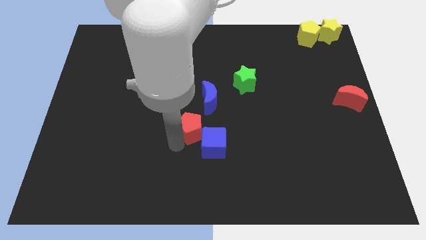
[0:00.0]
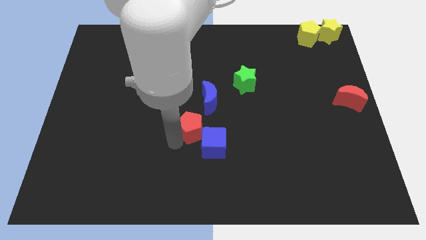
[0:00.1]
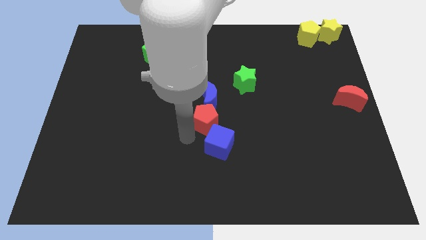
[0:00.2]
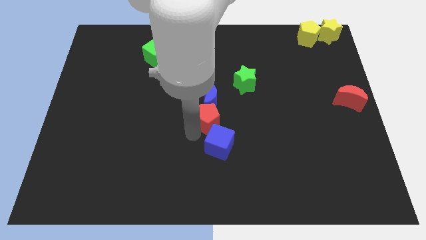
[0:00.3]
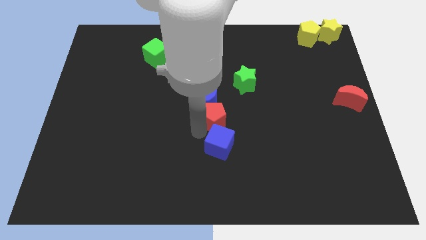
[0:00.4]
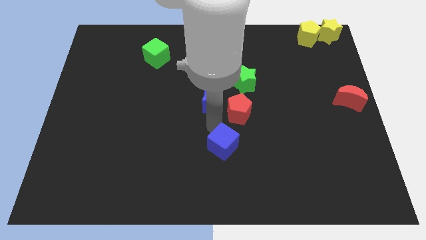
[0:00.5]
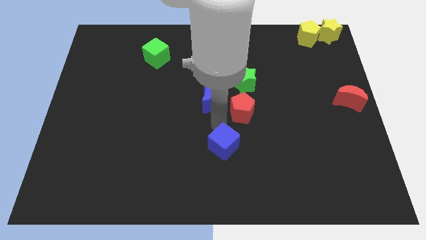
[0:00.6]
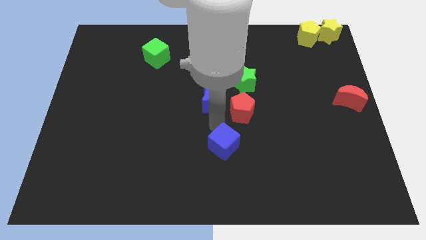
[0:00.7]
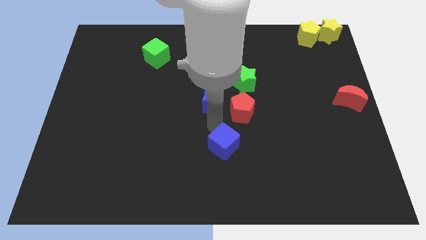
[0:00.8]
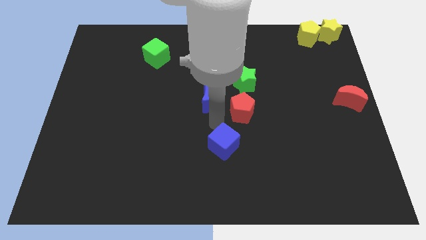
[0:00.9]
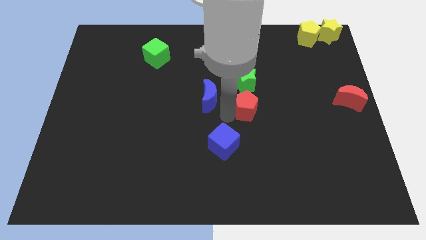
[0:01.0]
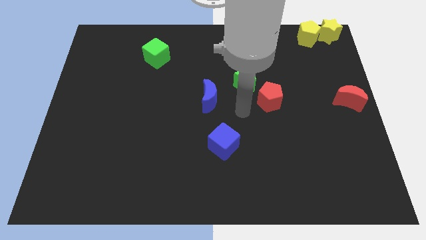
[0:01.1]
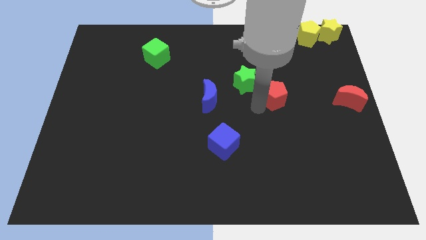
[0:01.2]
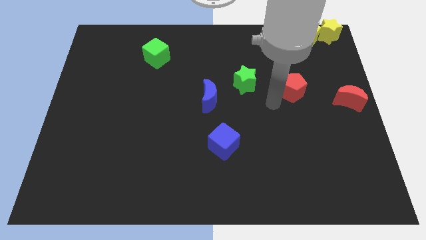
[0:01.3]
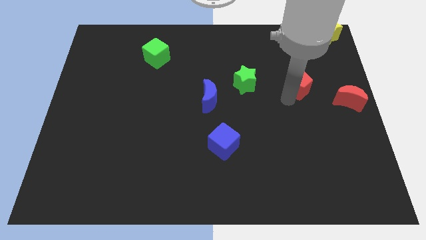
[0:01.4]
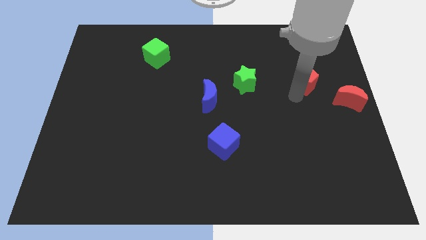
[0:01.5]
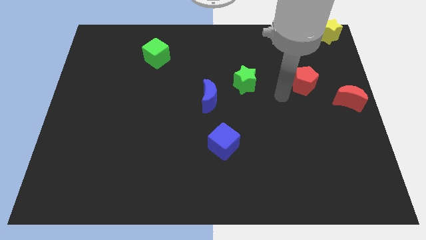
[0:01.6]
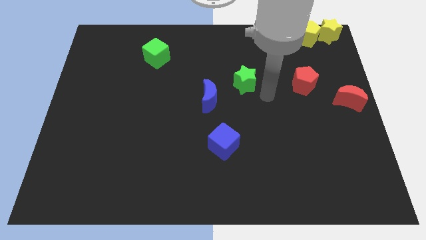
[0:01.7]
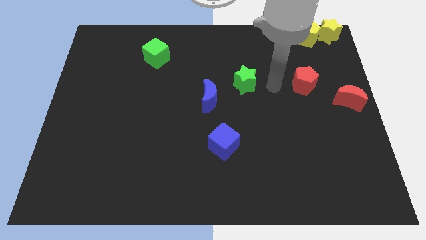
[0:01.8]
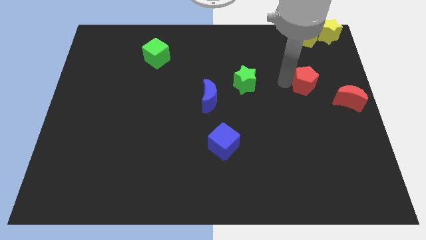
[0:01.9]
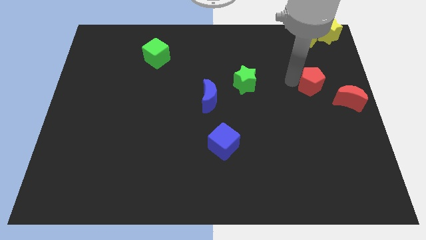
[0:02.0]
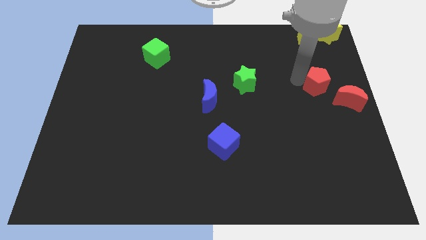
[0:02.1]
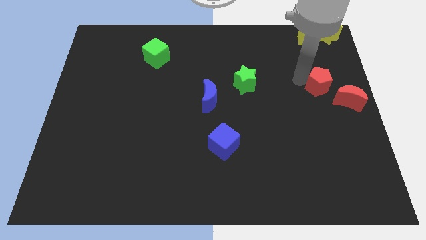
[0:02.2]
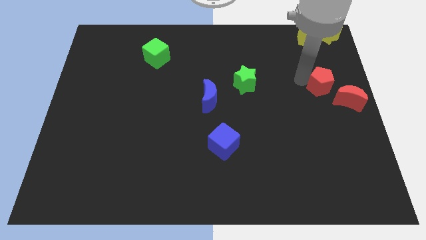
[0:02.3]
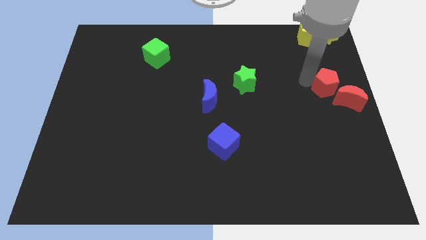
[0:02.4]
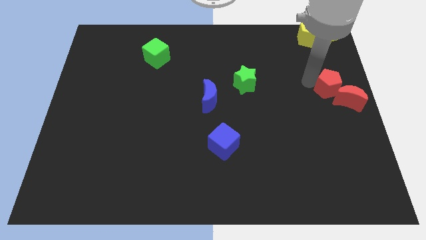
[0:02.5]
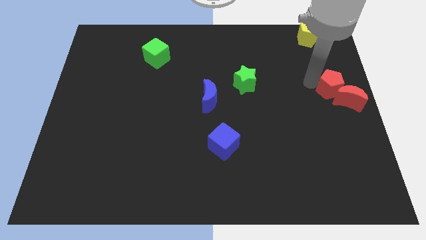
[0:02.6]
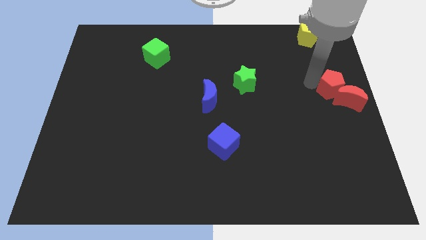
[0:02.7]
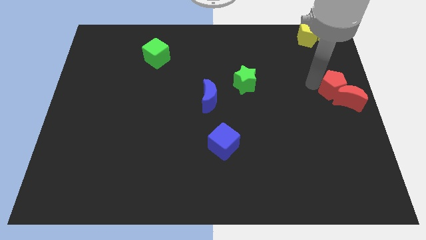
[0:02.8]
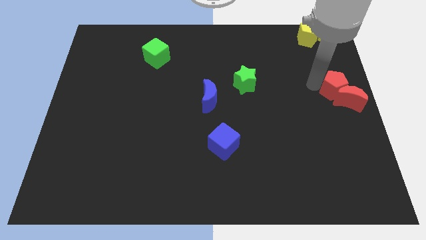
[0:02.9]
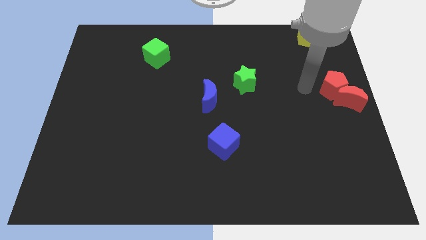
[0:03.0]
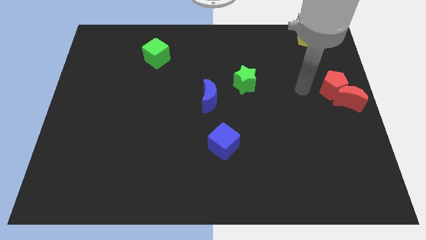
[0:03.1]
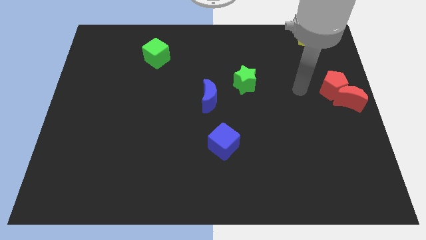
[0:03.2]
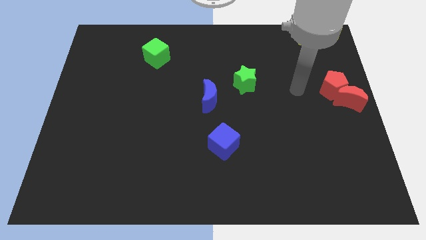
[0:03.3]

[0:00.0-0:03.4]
place the red pentagon to top left of red crescent

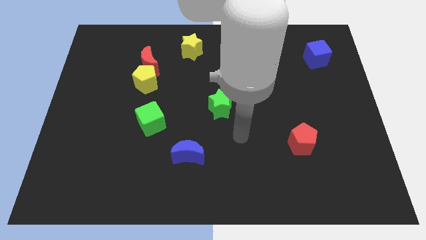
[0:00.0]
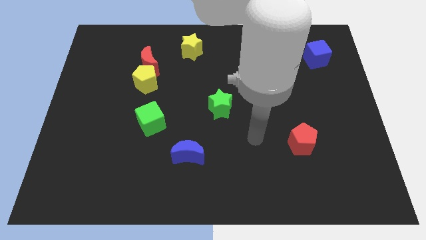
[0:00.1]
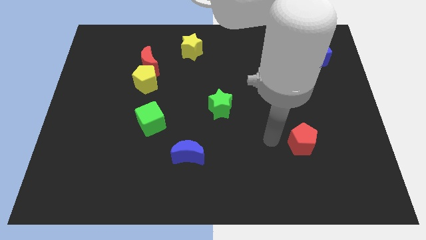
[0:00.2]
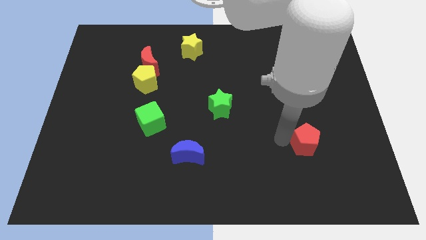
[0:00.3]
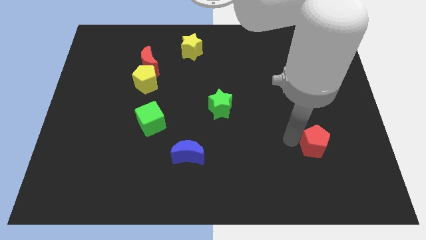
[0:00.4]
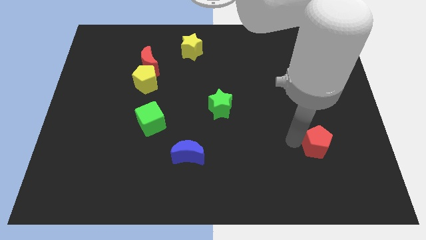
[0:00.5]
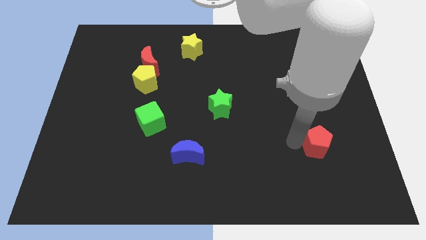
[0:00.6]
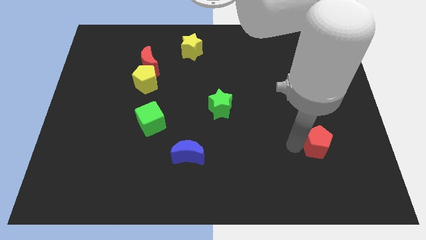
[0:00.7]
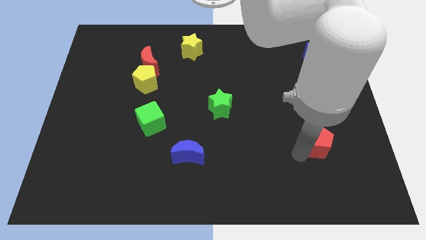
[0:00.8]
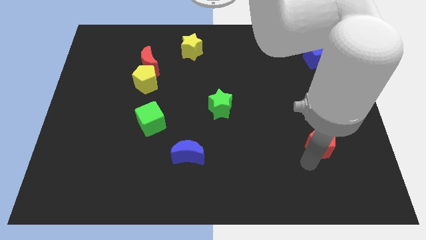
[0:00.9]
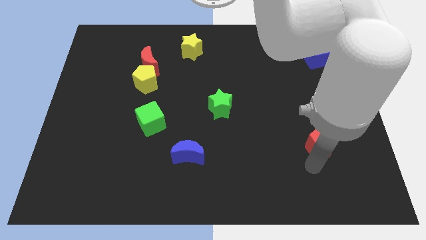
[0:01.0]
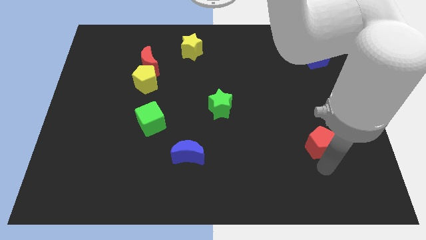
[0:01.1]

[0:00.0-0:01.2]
slightly move the red pentagon to the right

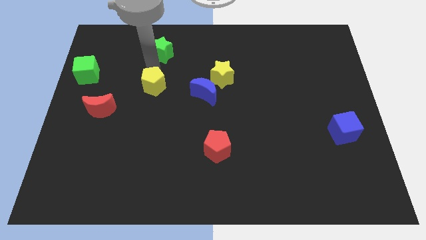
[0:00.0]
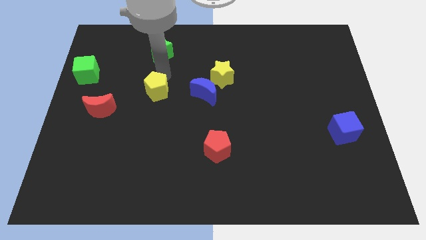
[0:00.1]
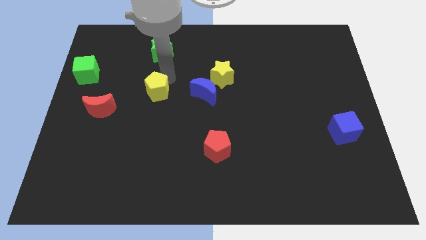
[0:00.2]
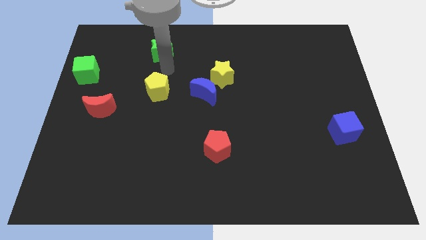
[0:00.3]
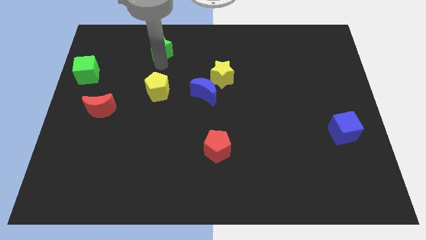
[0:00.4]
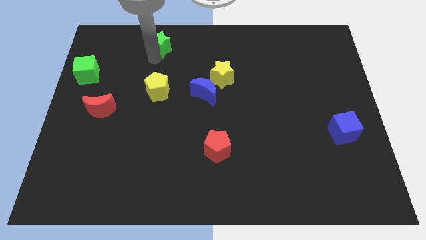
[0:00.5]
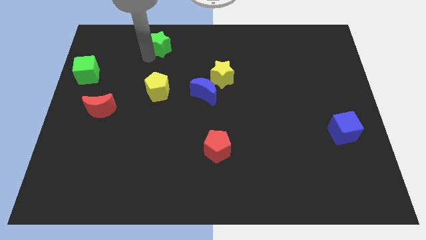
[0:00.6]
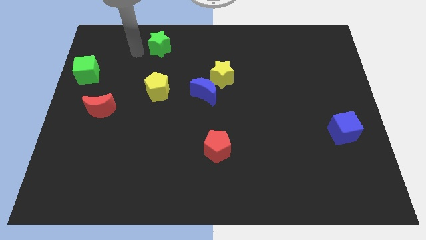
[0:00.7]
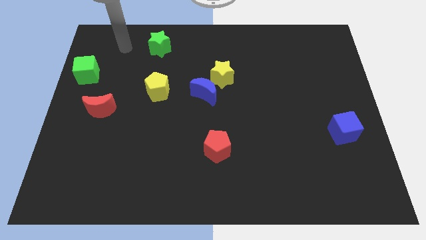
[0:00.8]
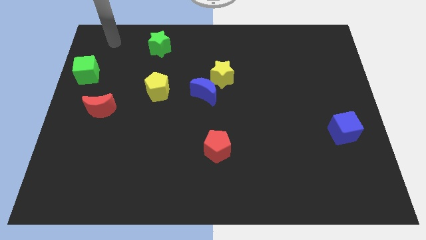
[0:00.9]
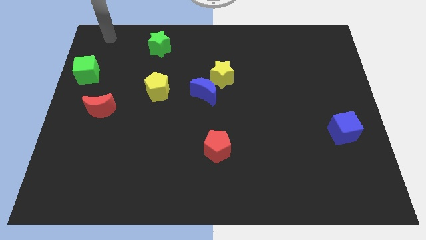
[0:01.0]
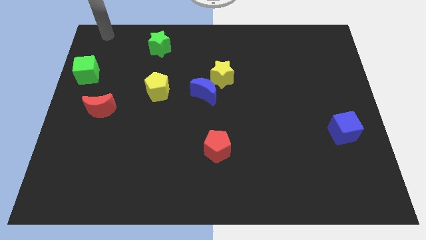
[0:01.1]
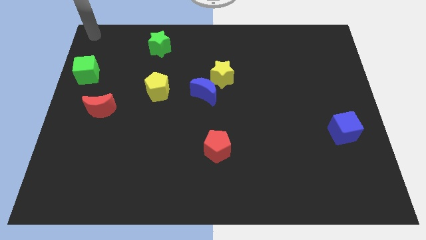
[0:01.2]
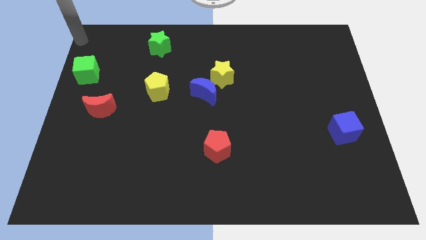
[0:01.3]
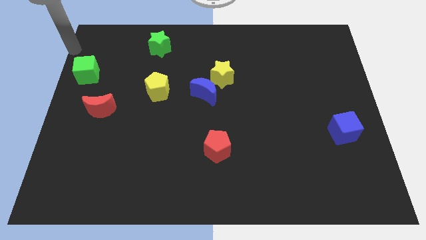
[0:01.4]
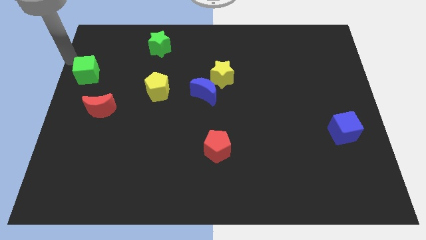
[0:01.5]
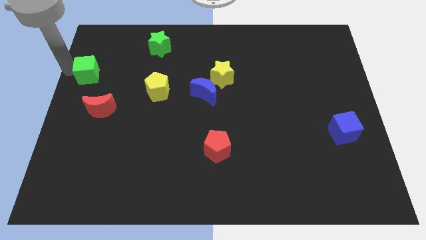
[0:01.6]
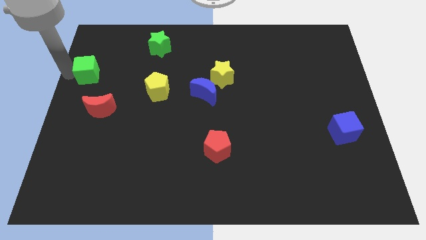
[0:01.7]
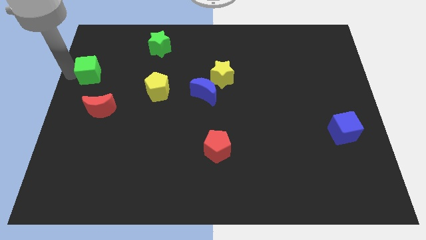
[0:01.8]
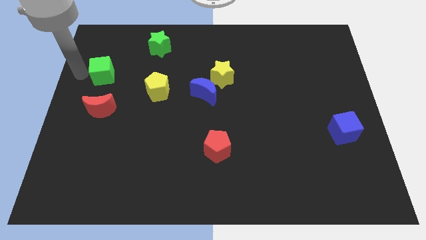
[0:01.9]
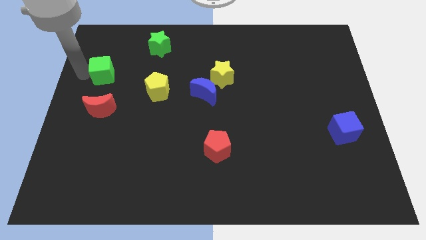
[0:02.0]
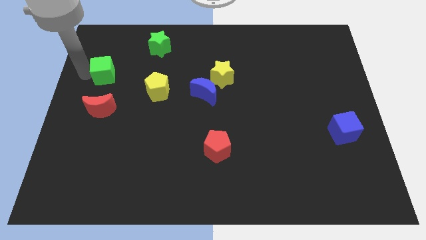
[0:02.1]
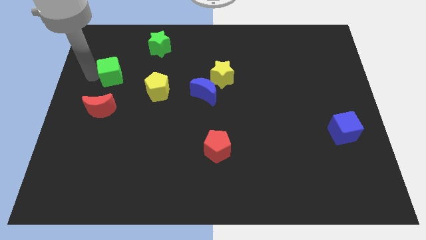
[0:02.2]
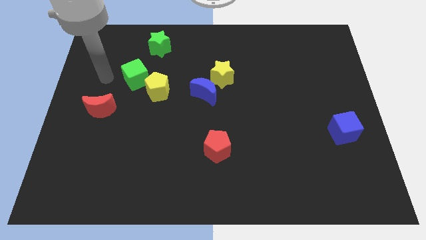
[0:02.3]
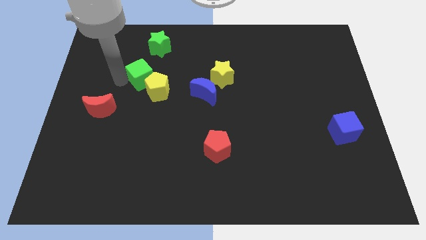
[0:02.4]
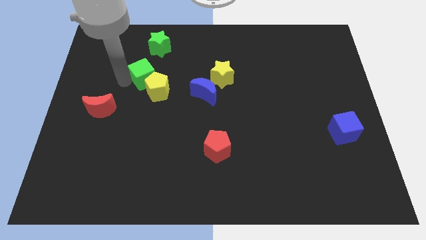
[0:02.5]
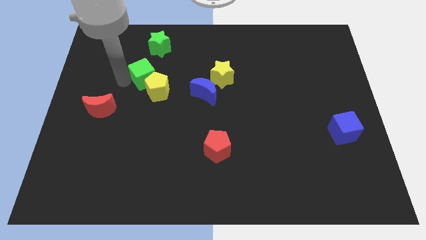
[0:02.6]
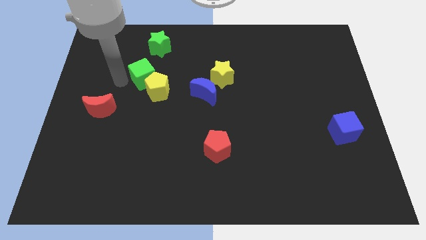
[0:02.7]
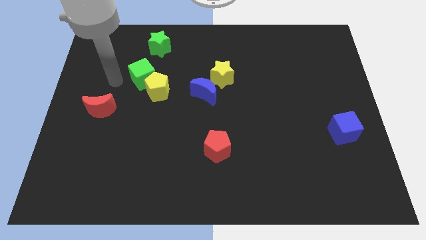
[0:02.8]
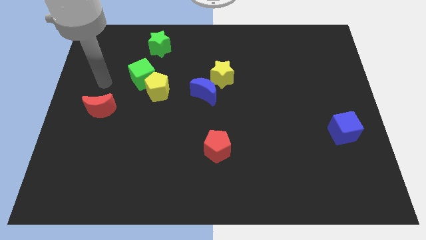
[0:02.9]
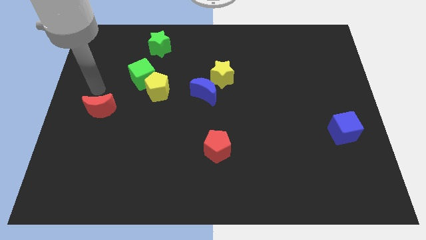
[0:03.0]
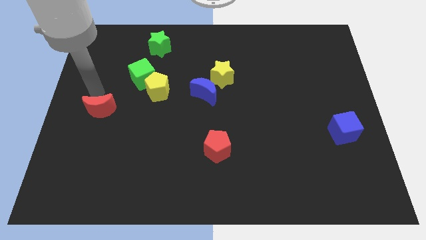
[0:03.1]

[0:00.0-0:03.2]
push the green cube closer to the yellow pentagon

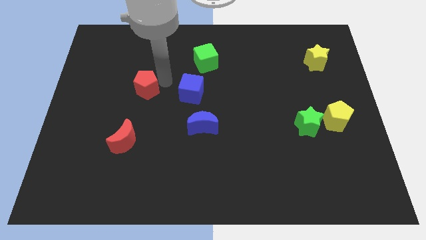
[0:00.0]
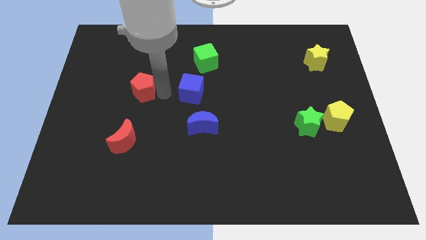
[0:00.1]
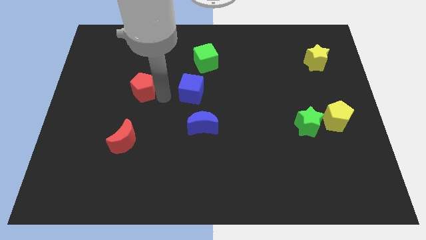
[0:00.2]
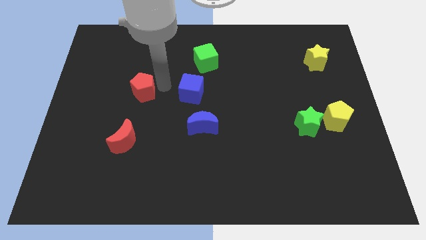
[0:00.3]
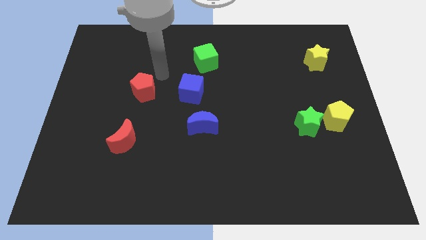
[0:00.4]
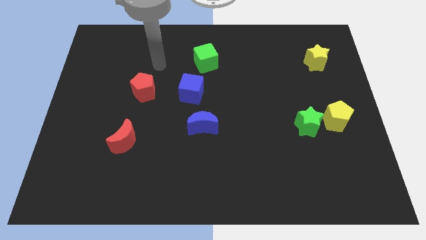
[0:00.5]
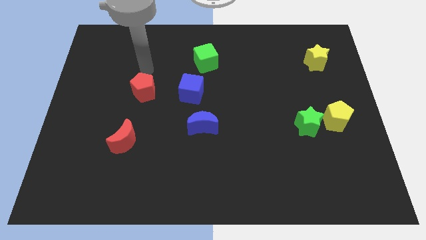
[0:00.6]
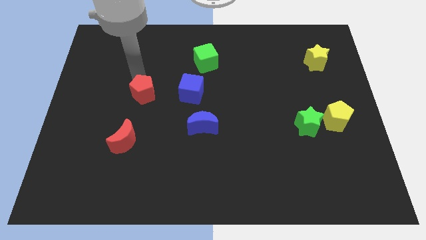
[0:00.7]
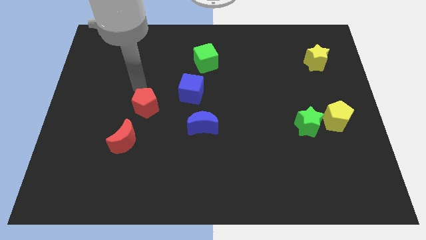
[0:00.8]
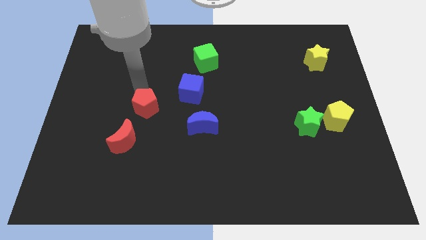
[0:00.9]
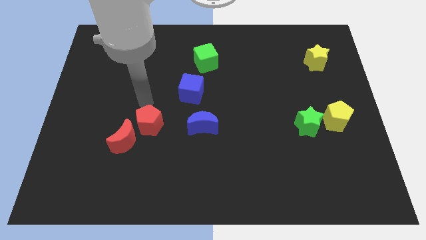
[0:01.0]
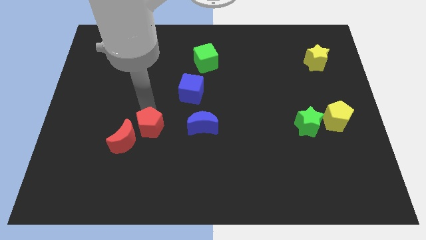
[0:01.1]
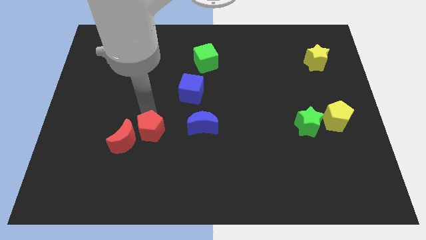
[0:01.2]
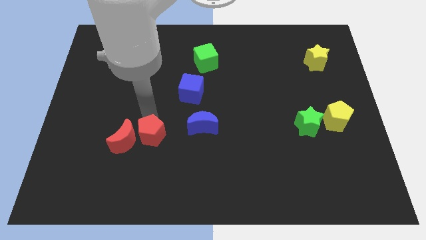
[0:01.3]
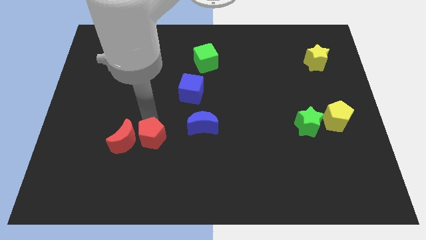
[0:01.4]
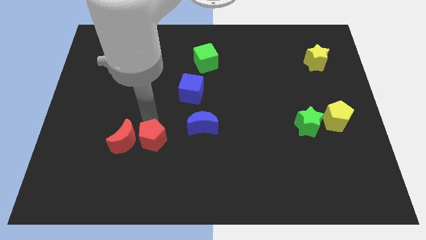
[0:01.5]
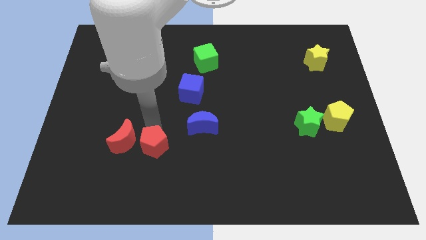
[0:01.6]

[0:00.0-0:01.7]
place the red pentagon to the right of the red moon
